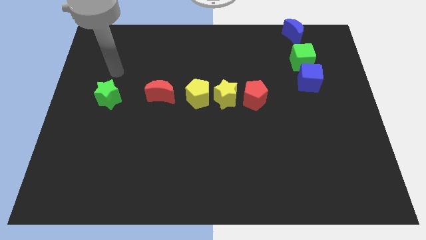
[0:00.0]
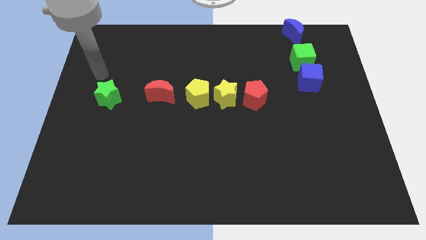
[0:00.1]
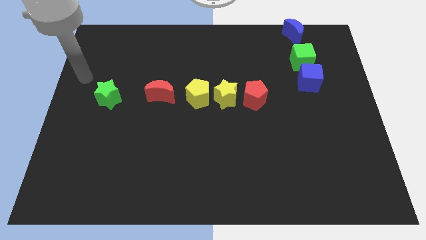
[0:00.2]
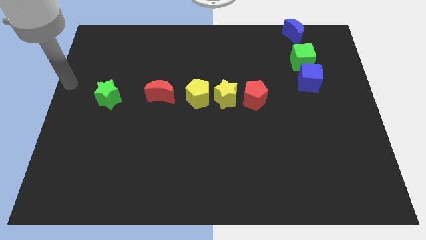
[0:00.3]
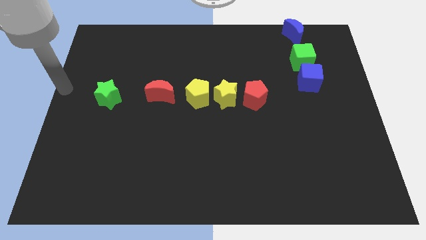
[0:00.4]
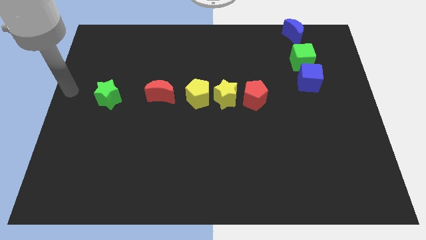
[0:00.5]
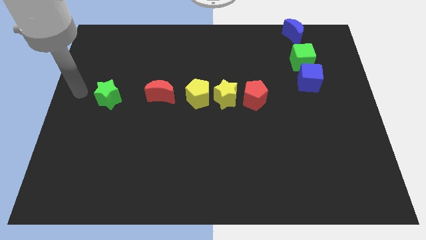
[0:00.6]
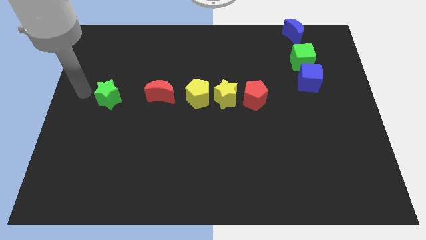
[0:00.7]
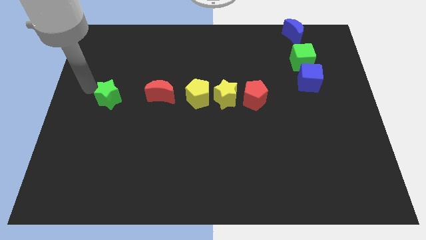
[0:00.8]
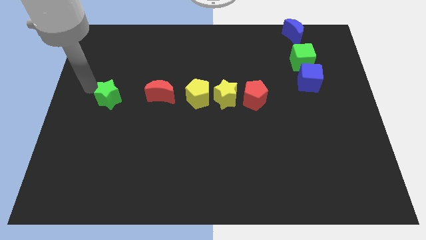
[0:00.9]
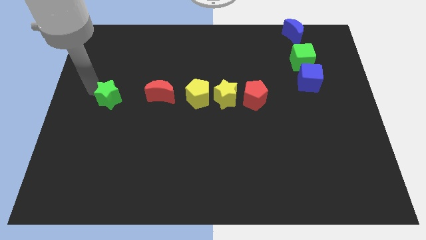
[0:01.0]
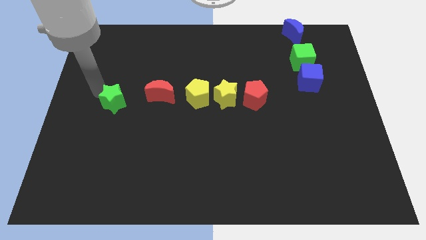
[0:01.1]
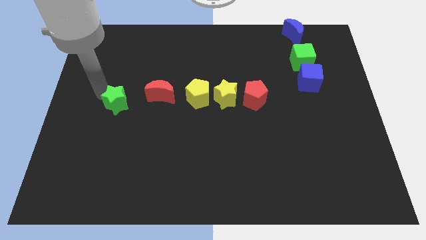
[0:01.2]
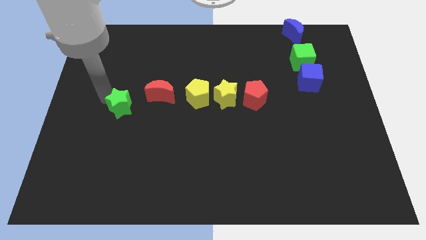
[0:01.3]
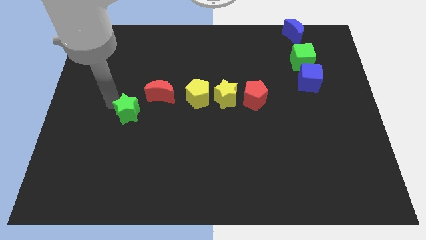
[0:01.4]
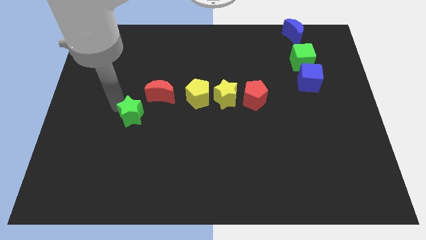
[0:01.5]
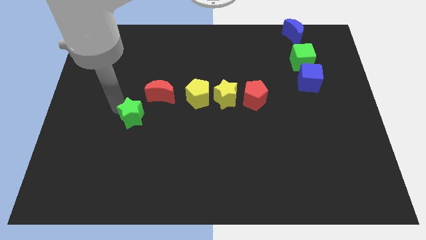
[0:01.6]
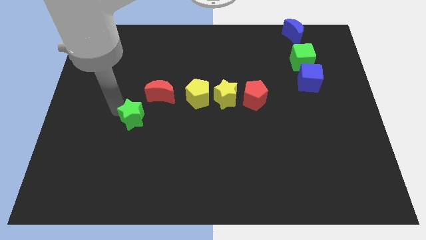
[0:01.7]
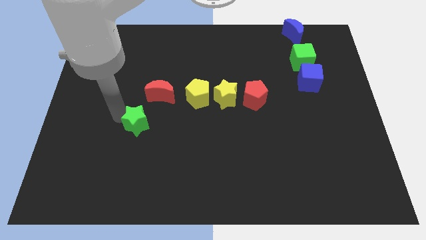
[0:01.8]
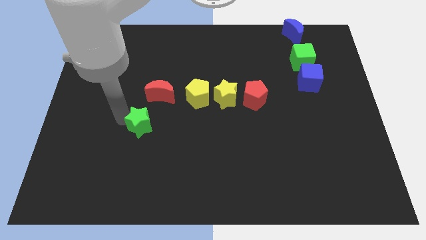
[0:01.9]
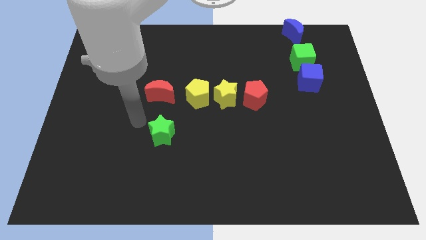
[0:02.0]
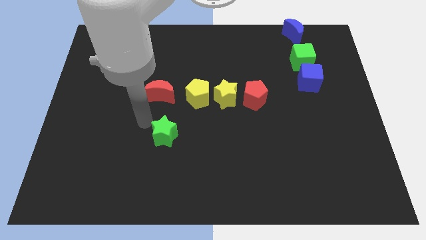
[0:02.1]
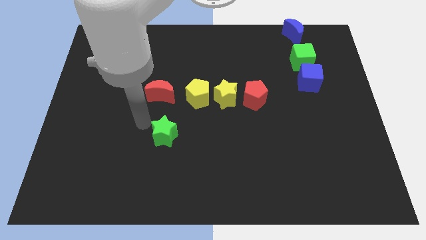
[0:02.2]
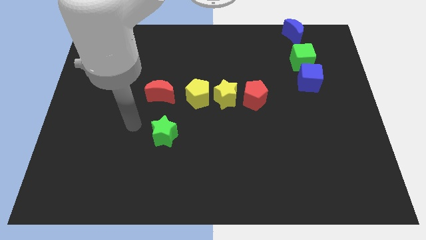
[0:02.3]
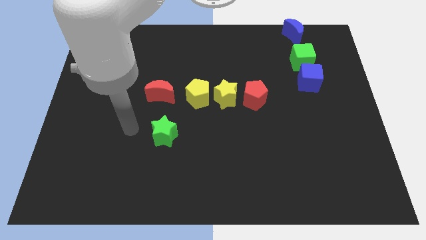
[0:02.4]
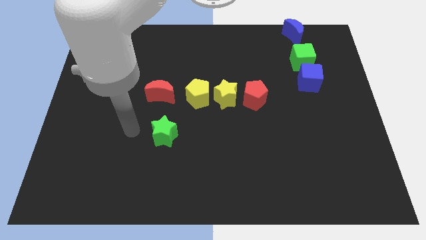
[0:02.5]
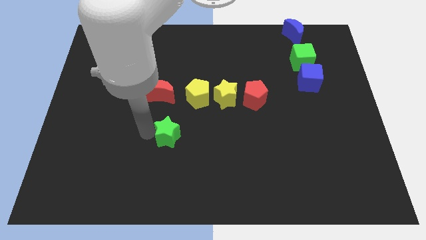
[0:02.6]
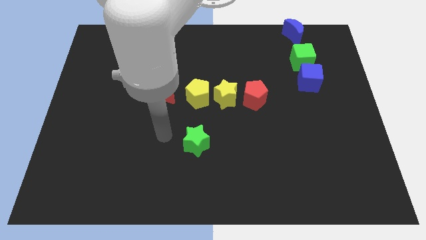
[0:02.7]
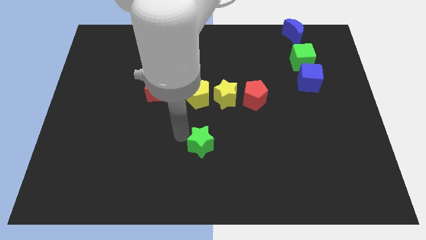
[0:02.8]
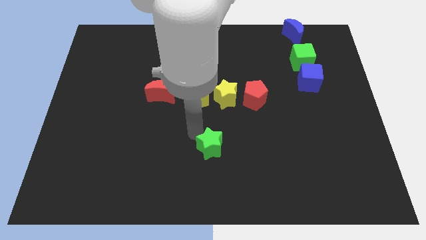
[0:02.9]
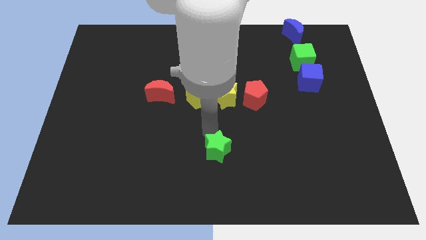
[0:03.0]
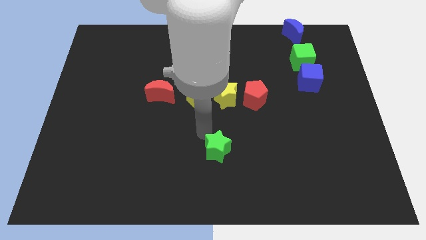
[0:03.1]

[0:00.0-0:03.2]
put the green star underneath the yellow star

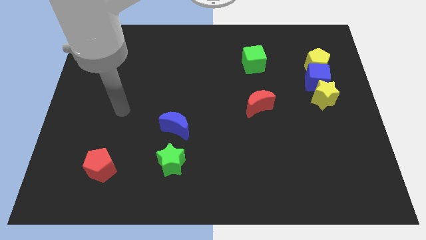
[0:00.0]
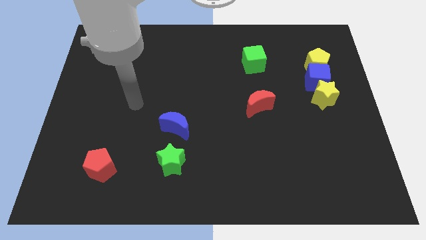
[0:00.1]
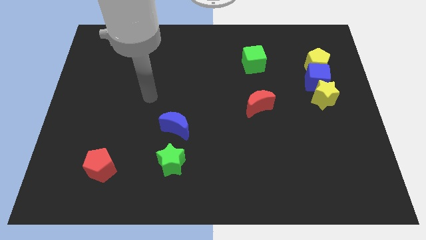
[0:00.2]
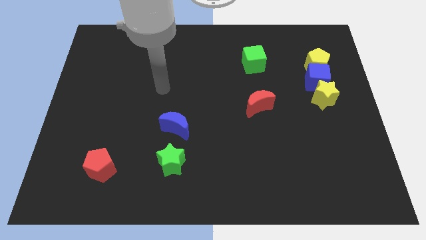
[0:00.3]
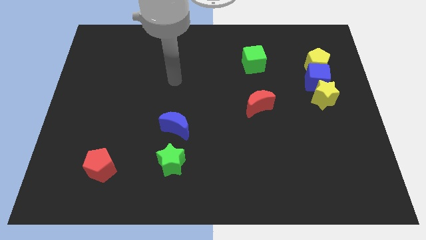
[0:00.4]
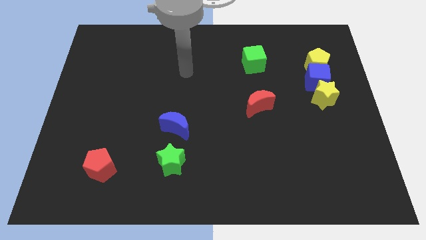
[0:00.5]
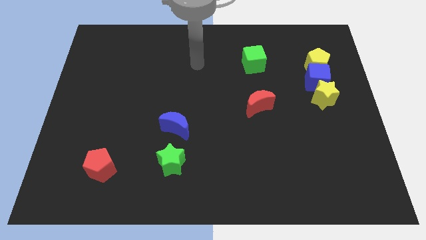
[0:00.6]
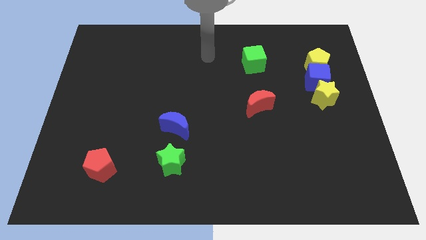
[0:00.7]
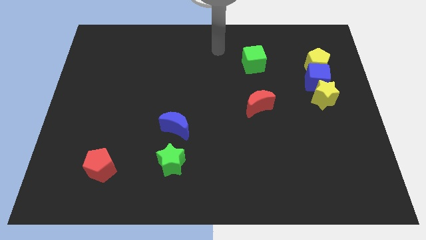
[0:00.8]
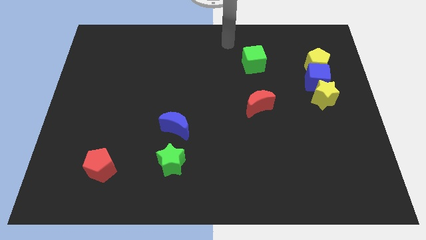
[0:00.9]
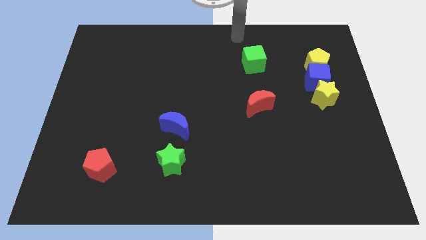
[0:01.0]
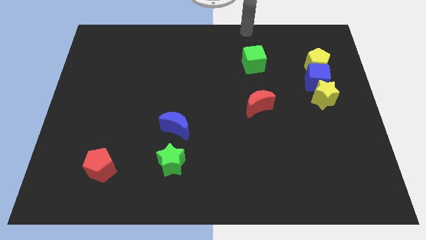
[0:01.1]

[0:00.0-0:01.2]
put your hand above the green cube

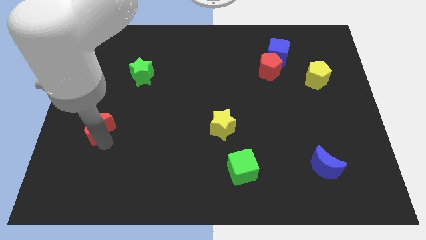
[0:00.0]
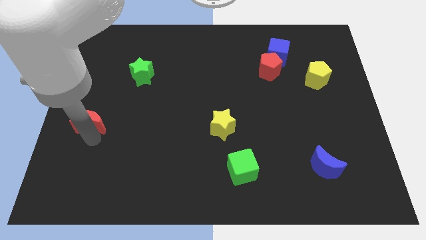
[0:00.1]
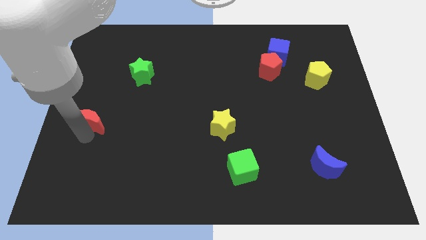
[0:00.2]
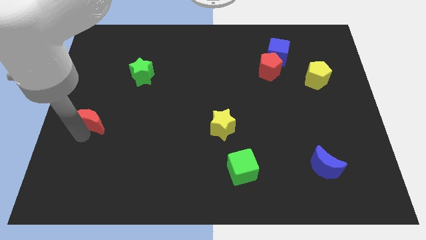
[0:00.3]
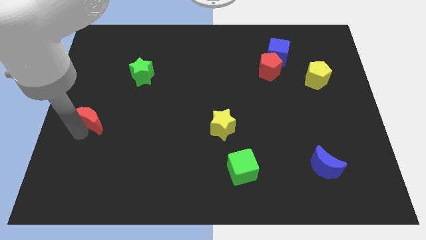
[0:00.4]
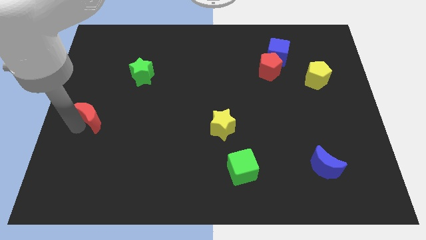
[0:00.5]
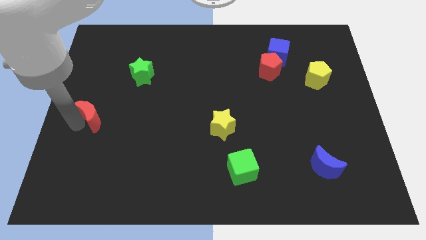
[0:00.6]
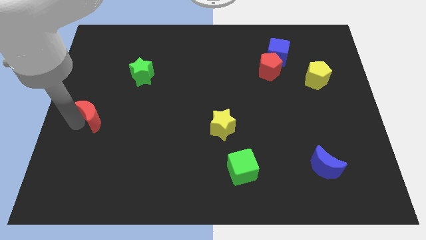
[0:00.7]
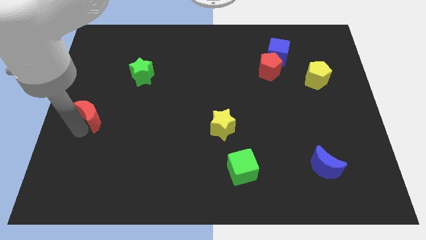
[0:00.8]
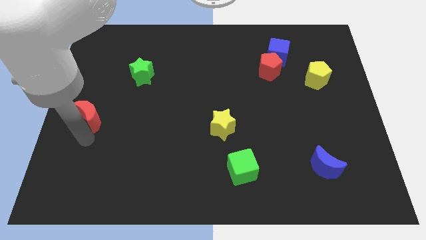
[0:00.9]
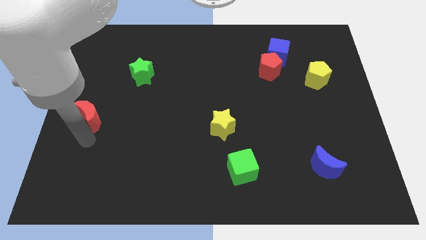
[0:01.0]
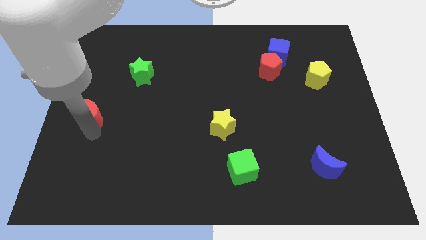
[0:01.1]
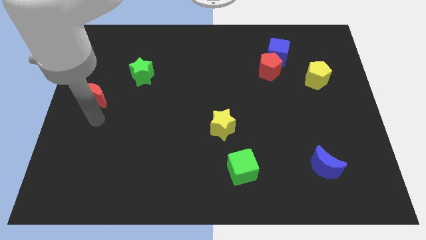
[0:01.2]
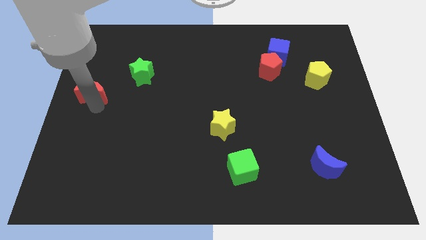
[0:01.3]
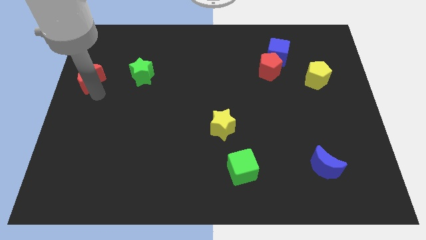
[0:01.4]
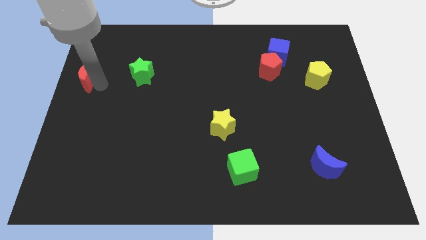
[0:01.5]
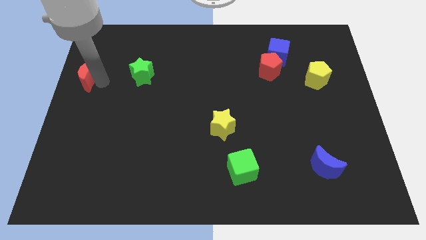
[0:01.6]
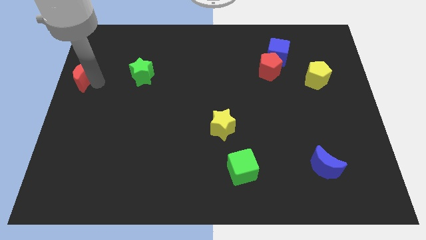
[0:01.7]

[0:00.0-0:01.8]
push the red crescent towards the left of the green star

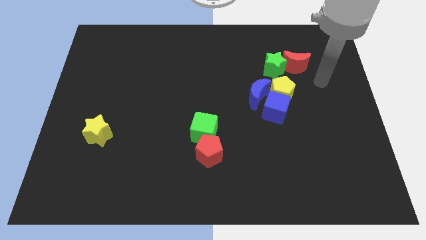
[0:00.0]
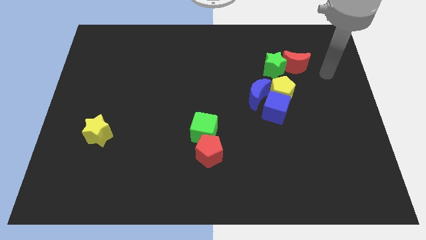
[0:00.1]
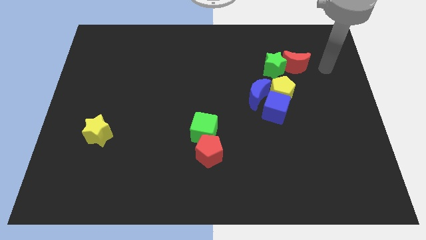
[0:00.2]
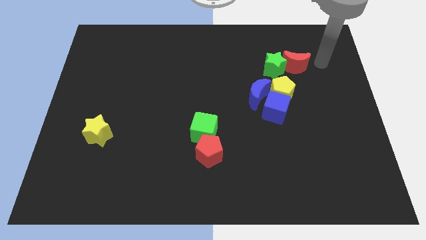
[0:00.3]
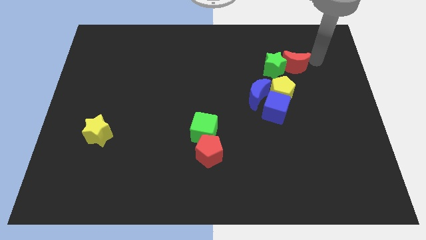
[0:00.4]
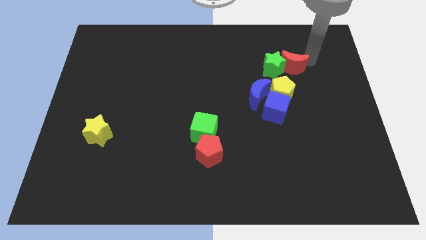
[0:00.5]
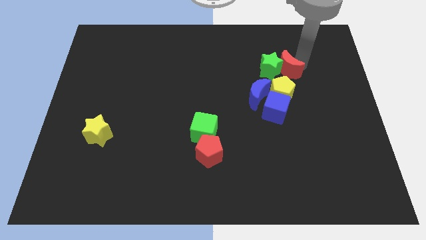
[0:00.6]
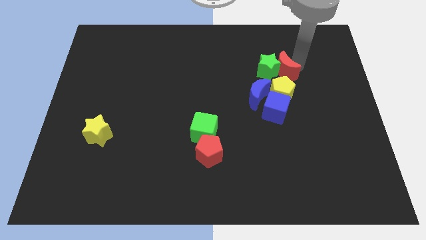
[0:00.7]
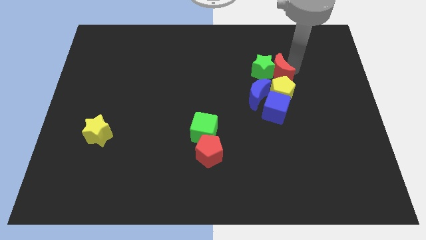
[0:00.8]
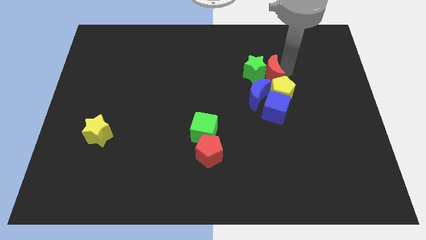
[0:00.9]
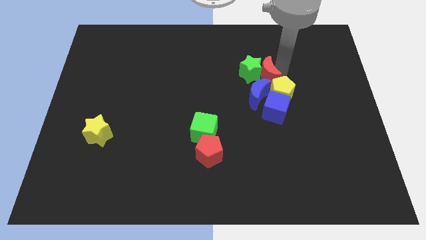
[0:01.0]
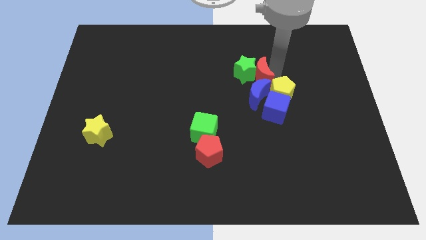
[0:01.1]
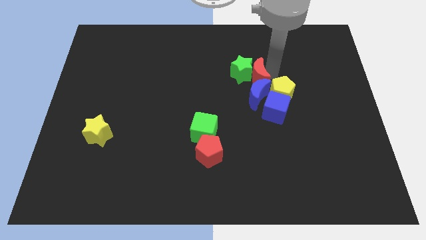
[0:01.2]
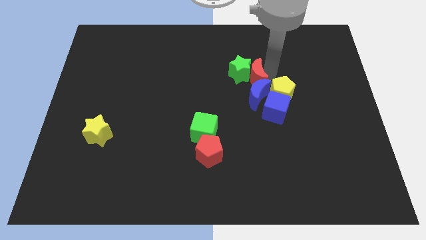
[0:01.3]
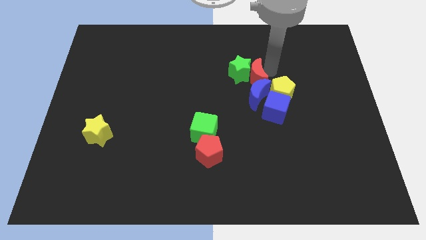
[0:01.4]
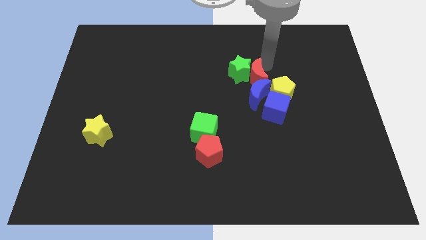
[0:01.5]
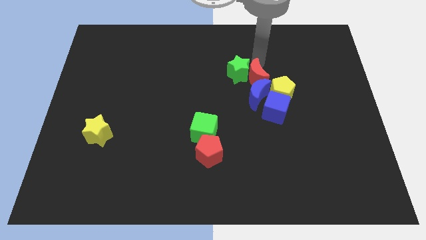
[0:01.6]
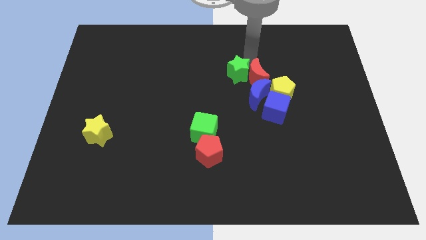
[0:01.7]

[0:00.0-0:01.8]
push the red crescent and green star towards the center of the board

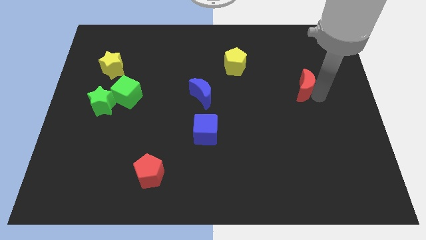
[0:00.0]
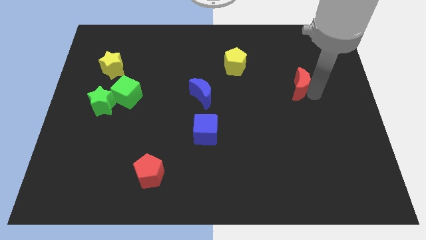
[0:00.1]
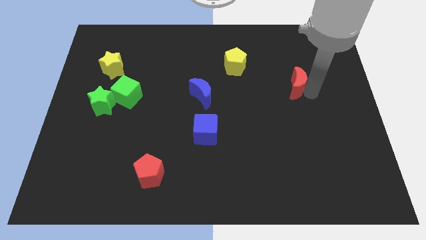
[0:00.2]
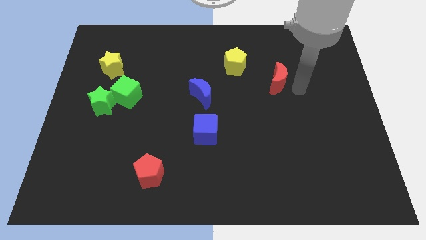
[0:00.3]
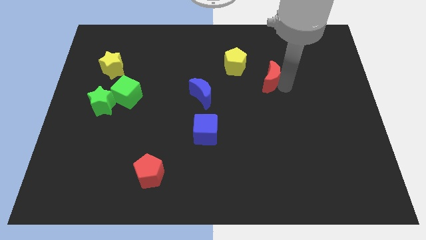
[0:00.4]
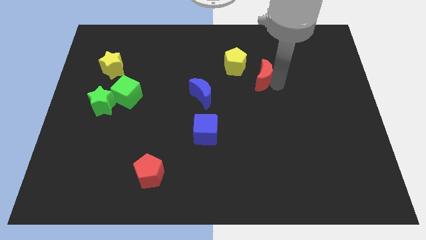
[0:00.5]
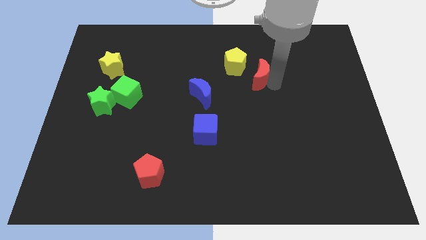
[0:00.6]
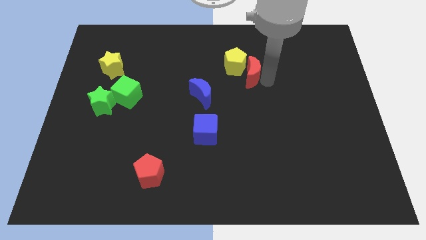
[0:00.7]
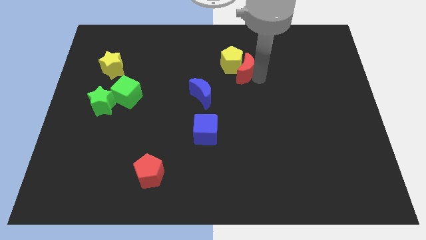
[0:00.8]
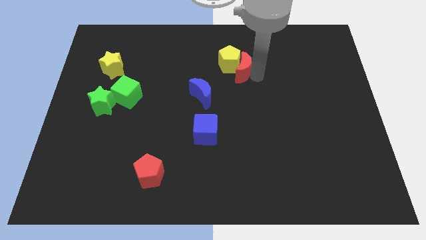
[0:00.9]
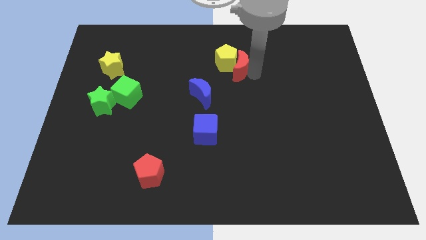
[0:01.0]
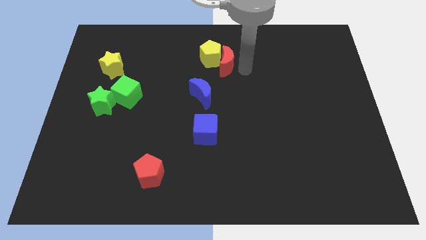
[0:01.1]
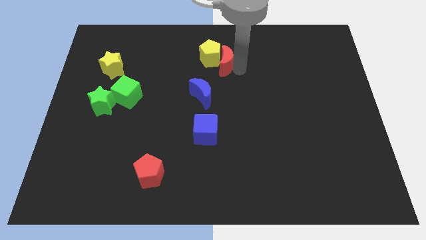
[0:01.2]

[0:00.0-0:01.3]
move the red crescent to the right side of the yellow pentagon on the board
